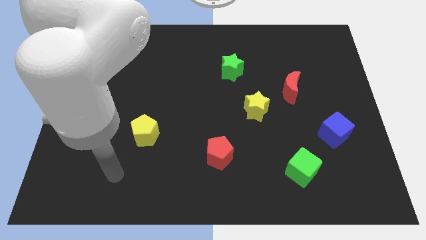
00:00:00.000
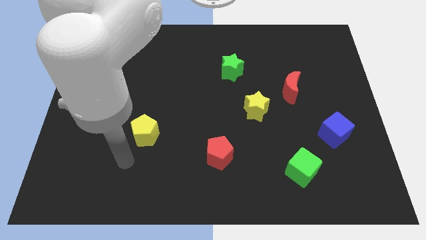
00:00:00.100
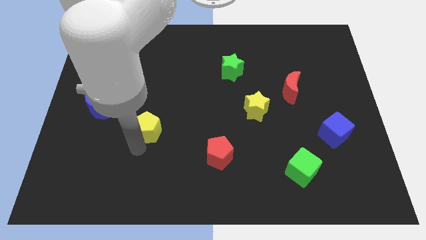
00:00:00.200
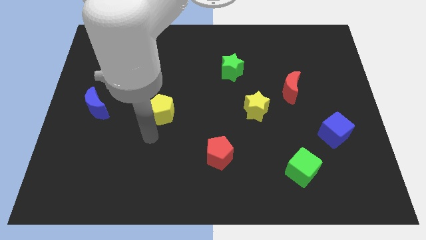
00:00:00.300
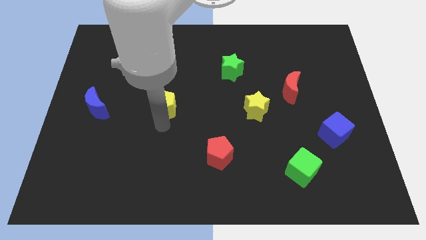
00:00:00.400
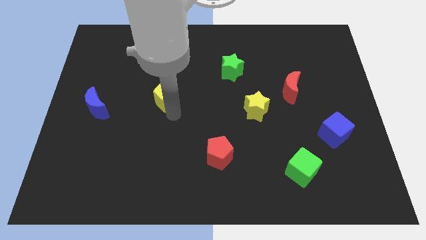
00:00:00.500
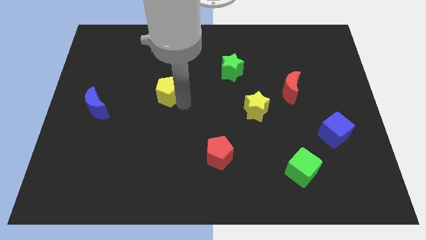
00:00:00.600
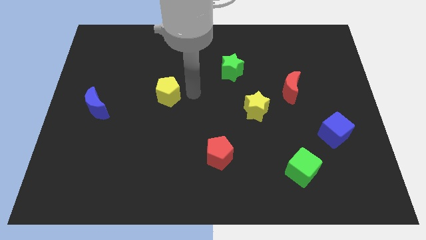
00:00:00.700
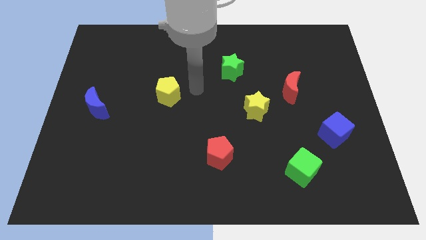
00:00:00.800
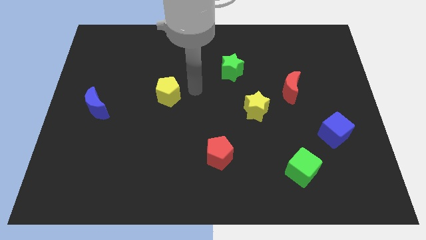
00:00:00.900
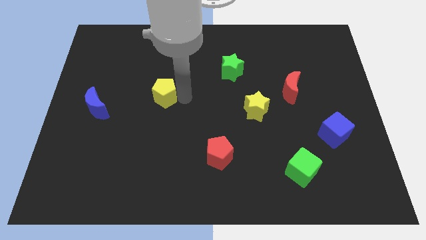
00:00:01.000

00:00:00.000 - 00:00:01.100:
push yellow pentagon slightly towards up

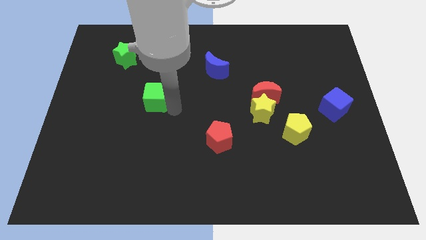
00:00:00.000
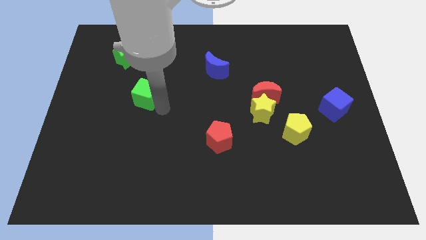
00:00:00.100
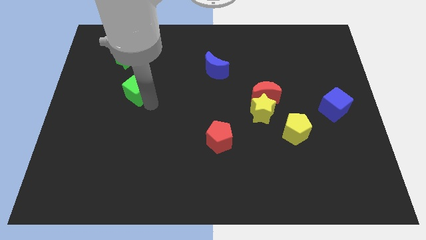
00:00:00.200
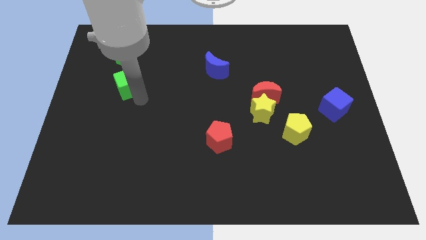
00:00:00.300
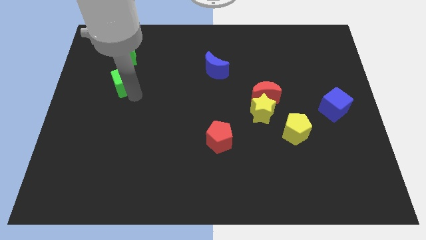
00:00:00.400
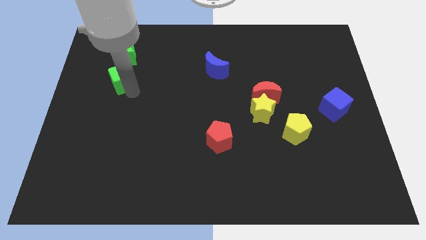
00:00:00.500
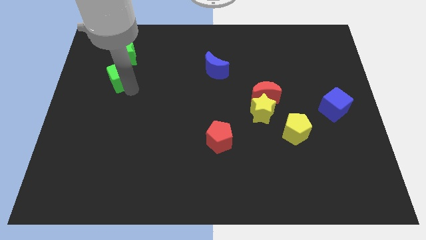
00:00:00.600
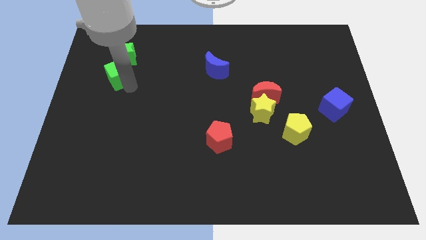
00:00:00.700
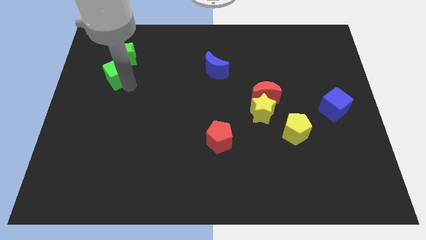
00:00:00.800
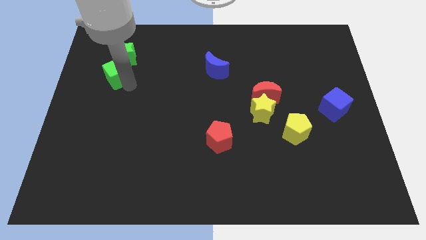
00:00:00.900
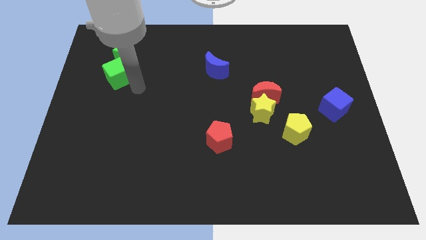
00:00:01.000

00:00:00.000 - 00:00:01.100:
place the green cube below the green star

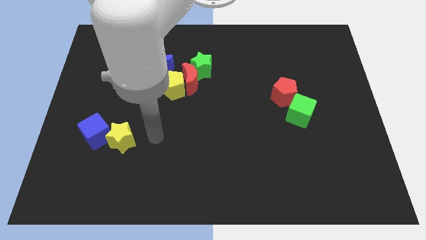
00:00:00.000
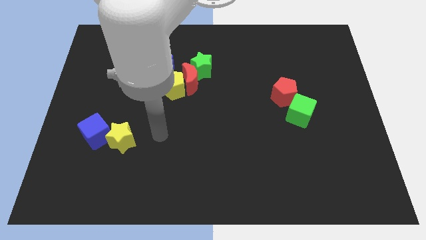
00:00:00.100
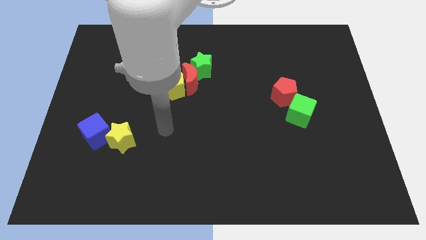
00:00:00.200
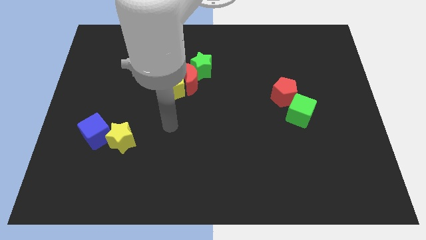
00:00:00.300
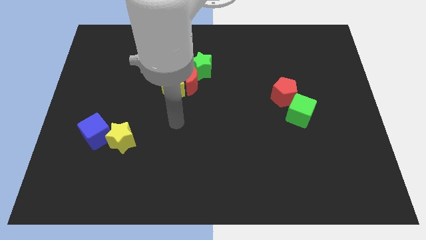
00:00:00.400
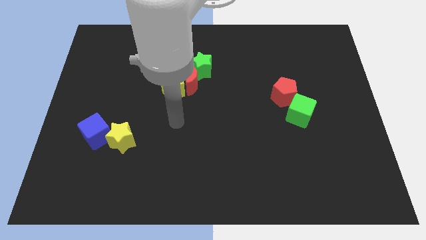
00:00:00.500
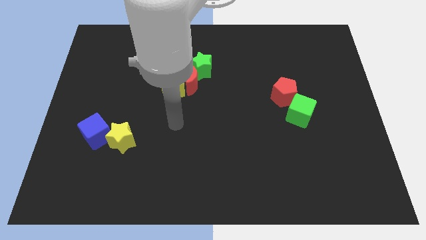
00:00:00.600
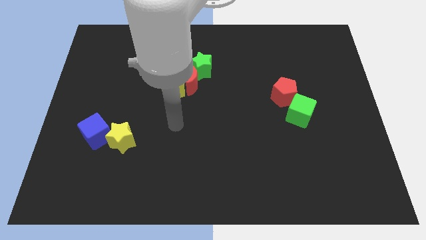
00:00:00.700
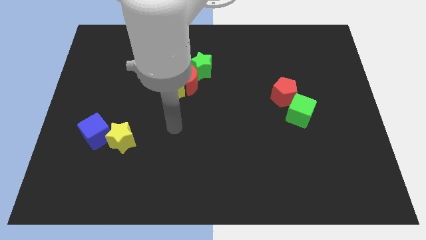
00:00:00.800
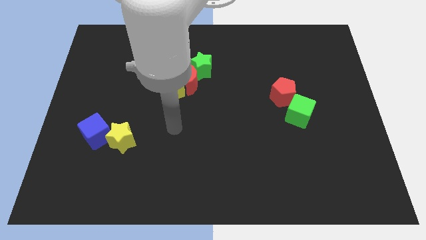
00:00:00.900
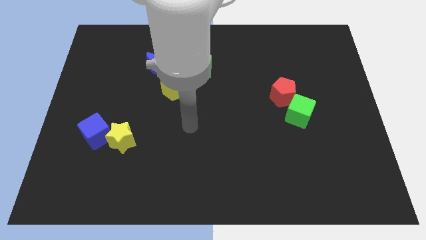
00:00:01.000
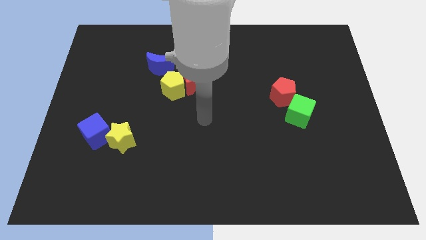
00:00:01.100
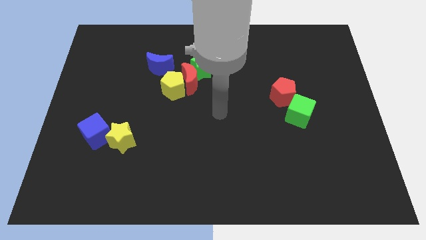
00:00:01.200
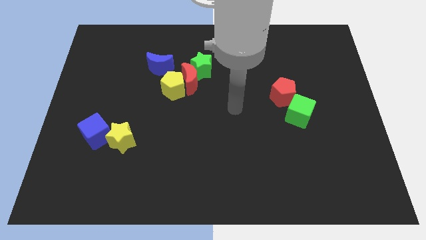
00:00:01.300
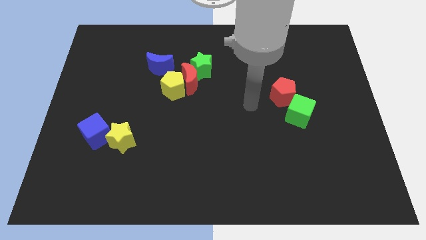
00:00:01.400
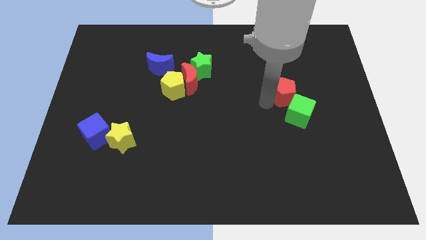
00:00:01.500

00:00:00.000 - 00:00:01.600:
move your arm to the left of the red pentagon

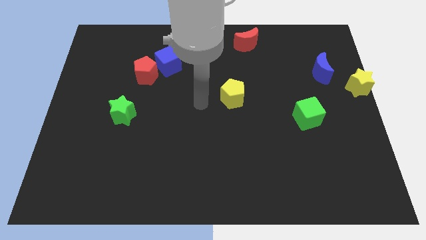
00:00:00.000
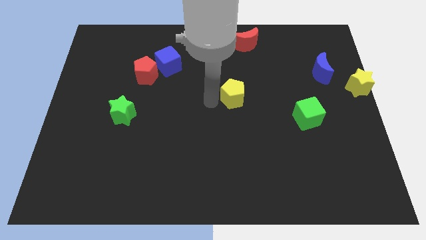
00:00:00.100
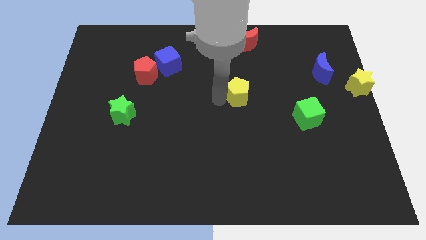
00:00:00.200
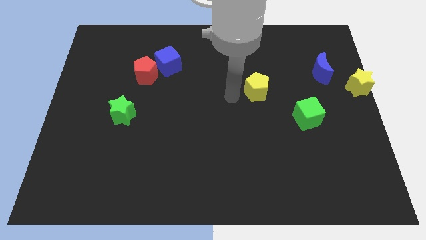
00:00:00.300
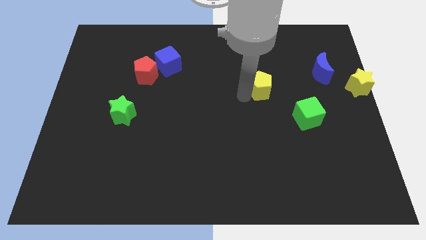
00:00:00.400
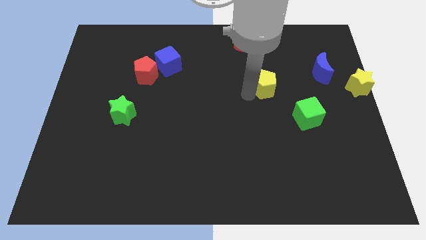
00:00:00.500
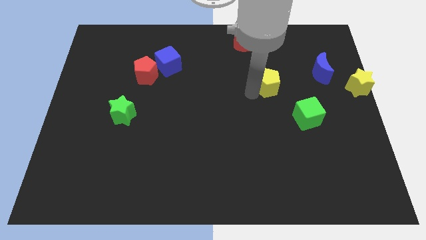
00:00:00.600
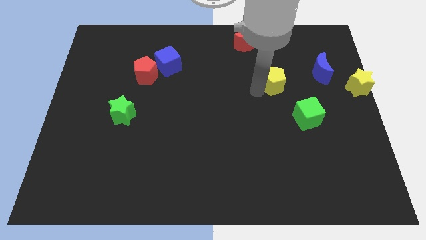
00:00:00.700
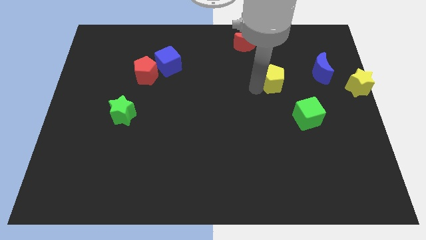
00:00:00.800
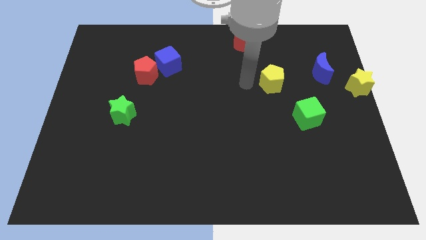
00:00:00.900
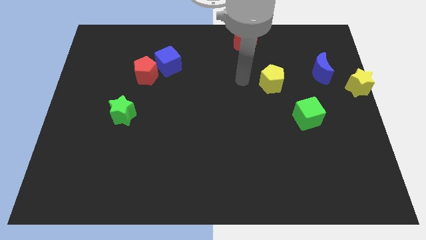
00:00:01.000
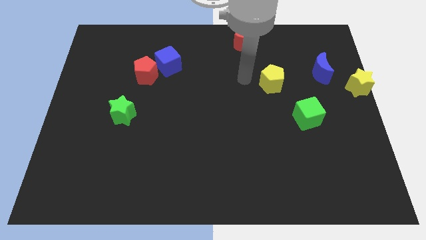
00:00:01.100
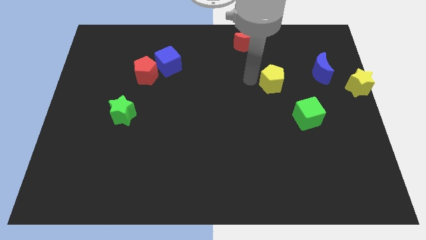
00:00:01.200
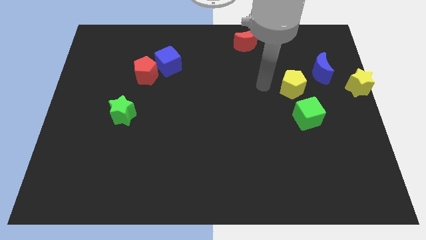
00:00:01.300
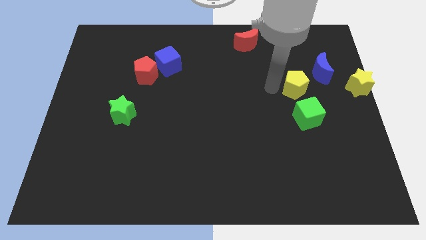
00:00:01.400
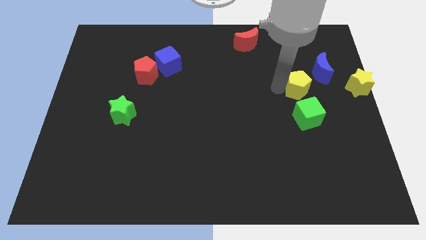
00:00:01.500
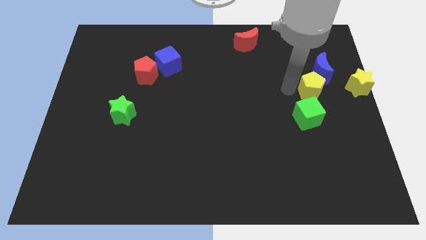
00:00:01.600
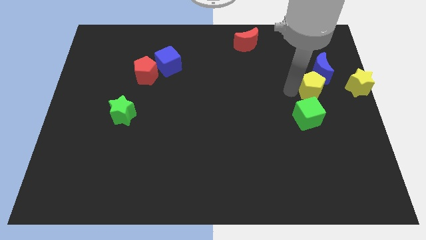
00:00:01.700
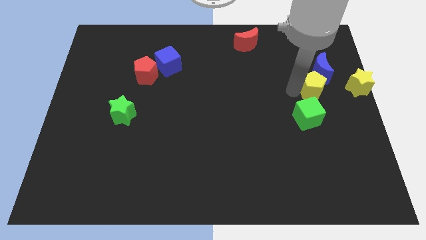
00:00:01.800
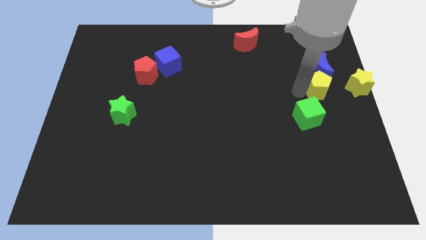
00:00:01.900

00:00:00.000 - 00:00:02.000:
push the yellow pentagon towards the left side of the yellow star

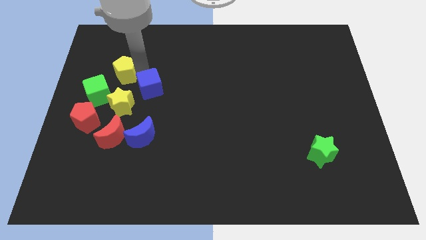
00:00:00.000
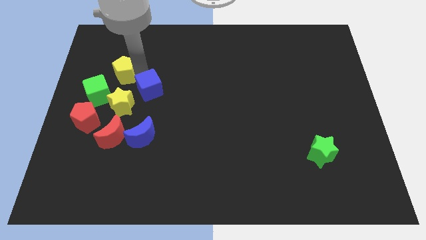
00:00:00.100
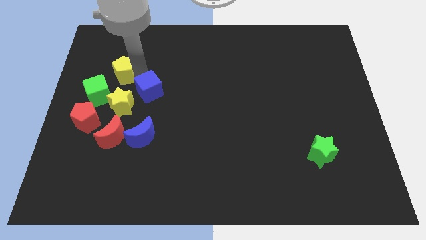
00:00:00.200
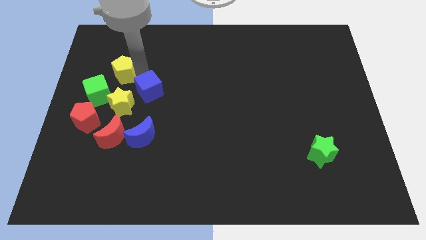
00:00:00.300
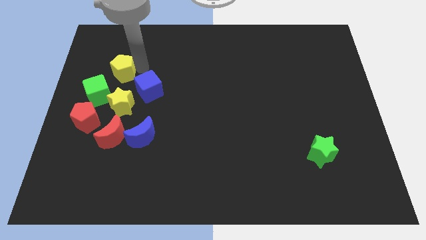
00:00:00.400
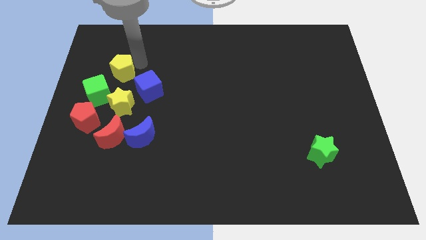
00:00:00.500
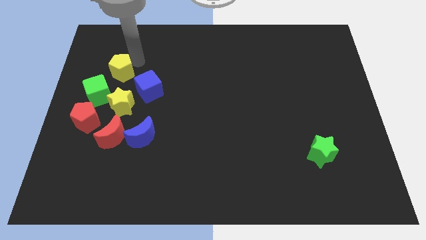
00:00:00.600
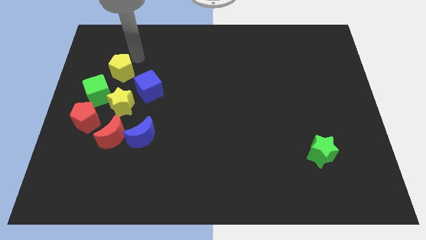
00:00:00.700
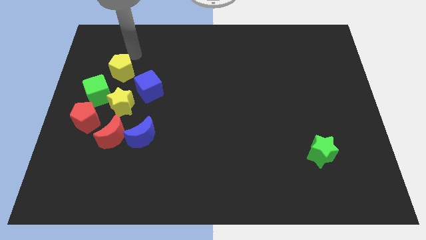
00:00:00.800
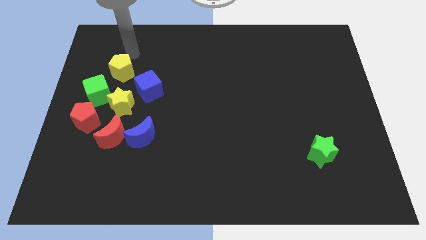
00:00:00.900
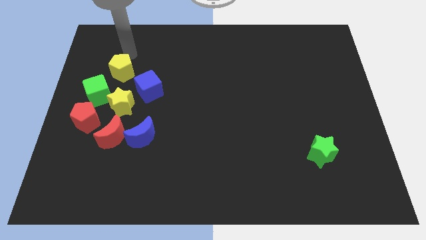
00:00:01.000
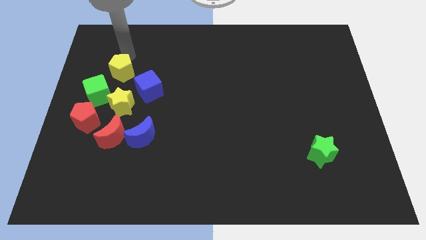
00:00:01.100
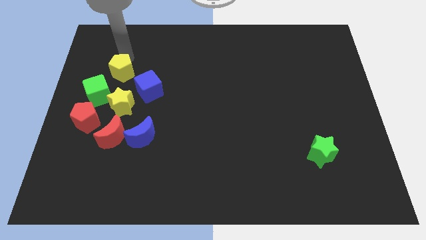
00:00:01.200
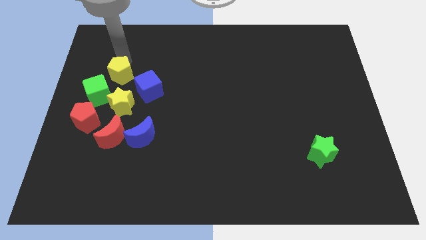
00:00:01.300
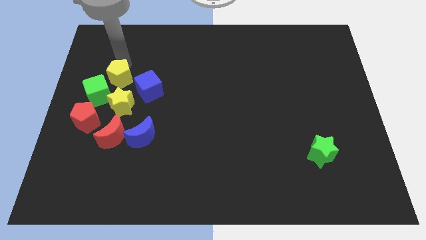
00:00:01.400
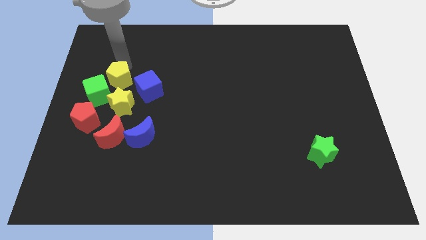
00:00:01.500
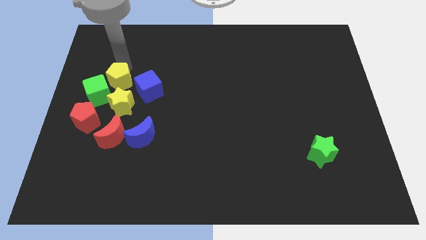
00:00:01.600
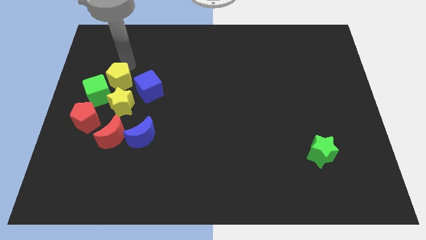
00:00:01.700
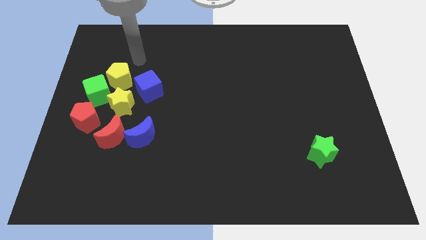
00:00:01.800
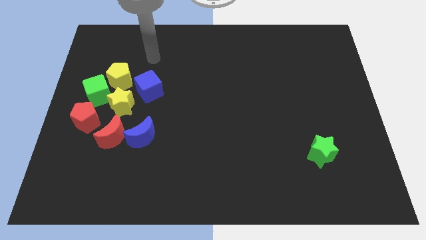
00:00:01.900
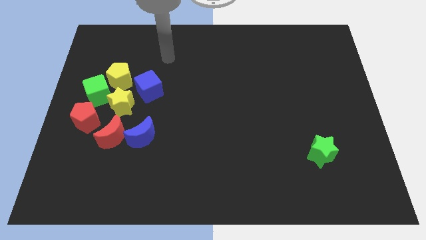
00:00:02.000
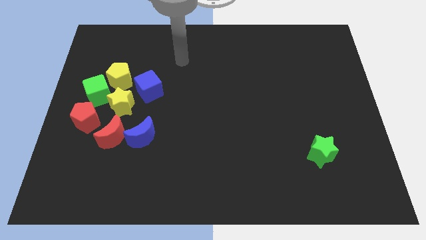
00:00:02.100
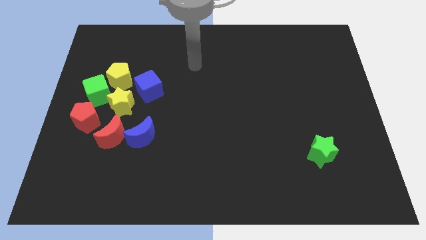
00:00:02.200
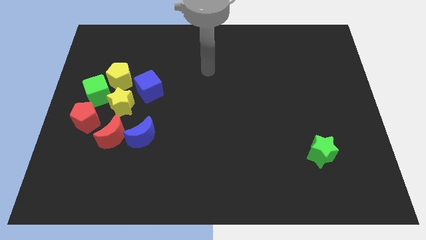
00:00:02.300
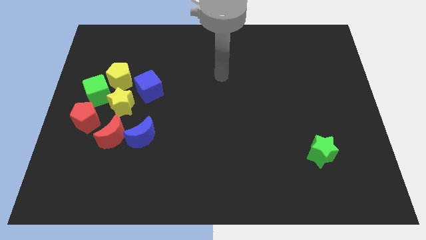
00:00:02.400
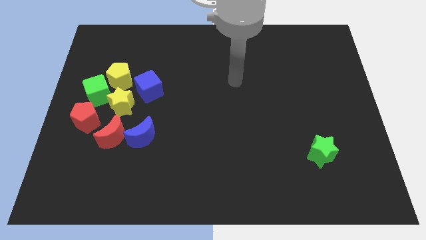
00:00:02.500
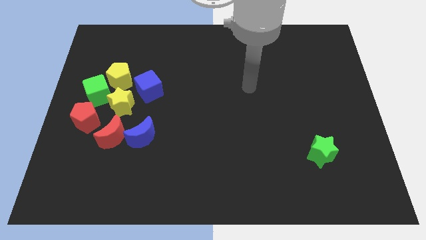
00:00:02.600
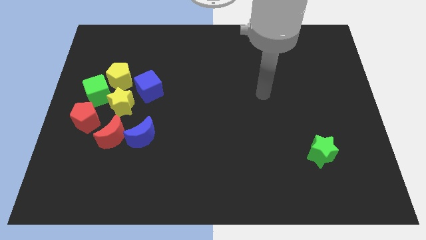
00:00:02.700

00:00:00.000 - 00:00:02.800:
slightly move the yellow pentagon above the yellow star

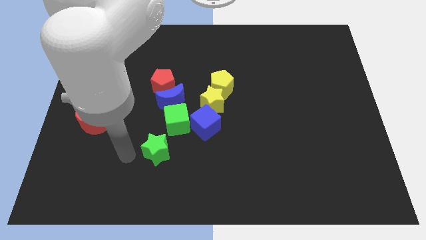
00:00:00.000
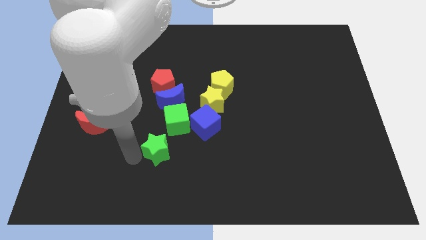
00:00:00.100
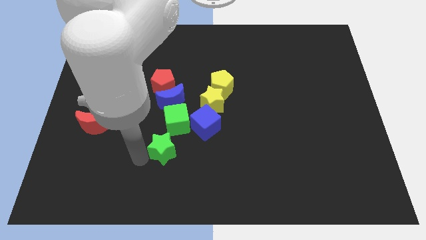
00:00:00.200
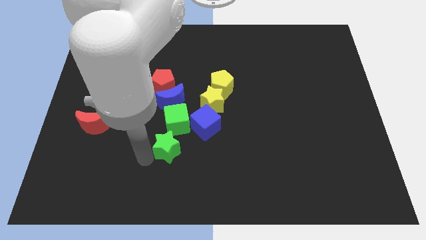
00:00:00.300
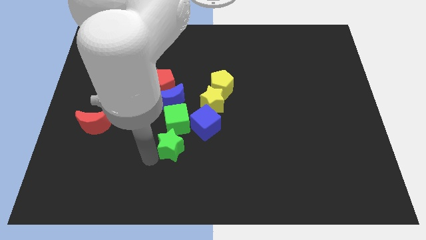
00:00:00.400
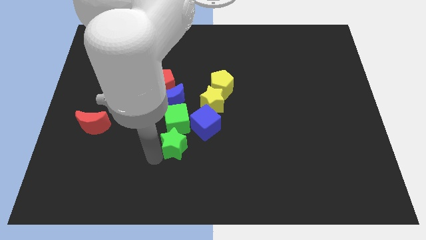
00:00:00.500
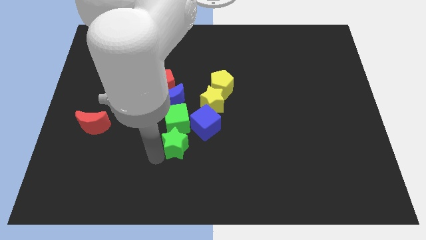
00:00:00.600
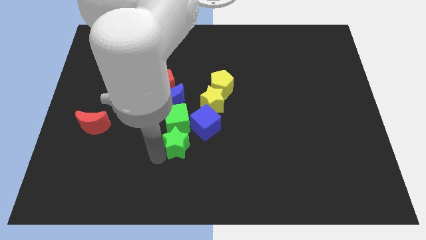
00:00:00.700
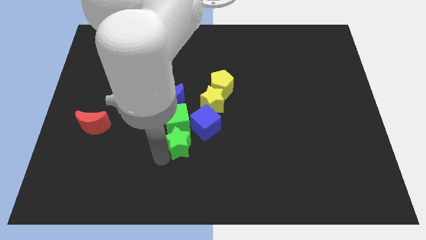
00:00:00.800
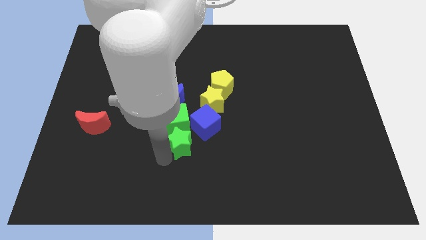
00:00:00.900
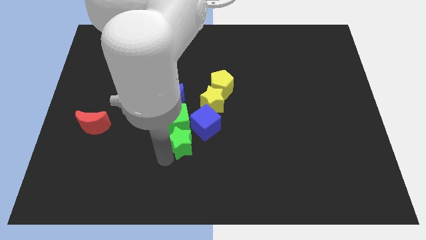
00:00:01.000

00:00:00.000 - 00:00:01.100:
slide the green star below the green cube
